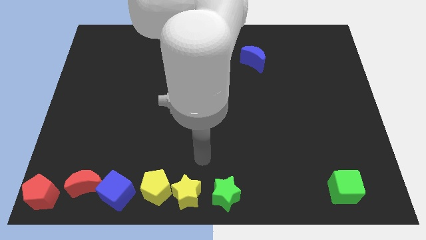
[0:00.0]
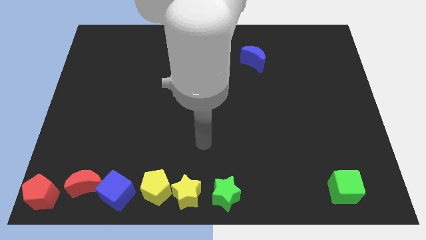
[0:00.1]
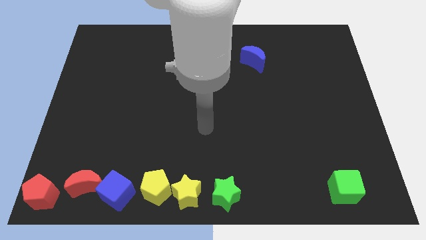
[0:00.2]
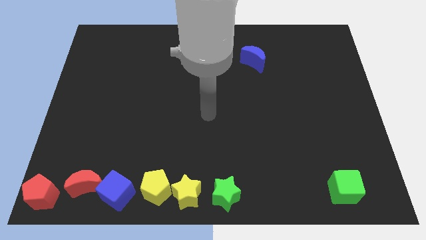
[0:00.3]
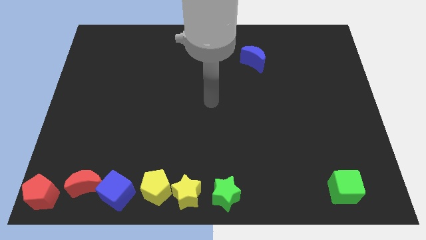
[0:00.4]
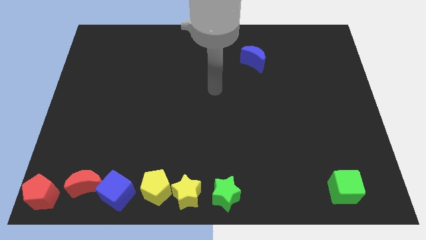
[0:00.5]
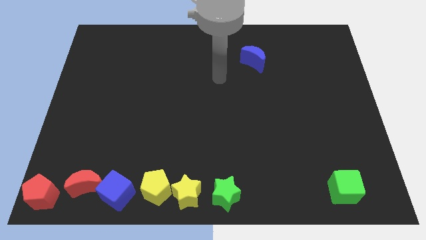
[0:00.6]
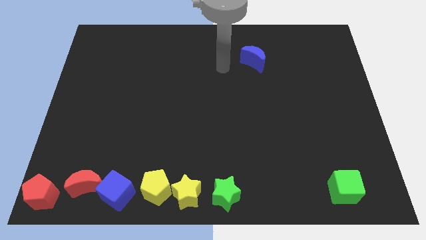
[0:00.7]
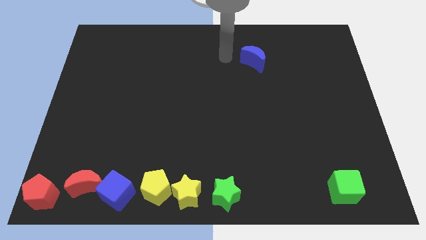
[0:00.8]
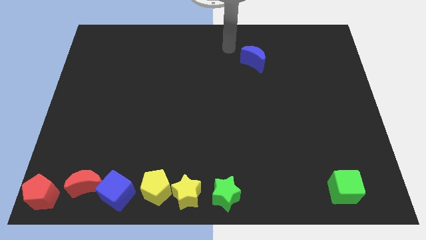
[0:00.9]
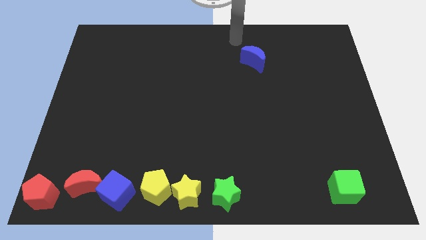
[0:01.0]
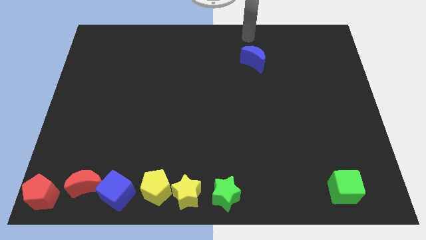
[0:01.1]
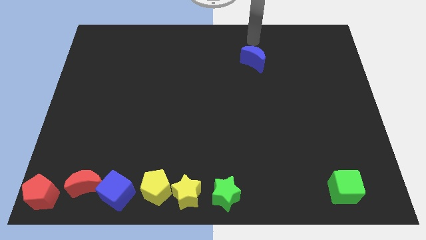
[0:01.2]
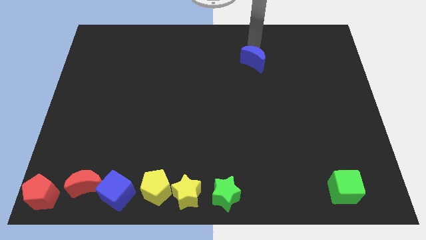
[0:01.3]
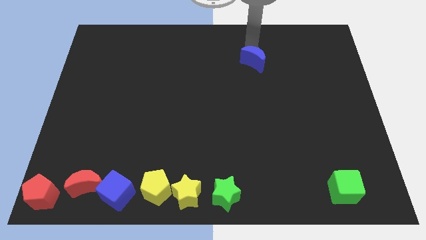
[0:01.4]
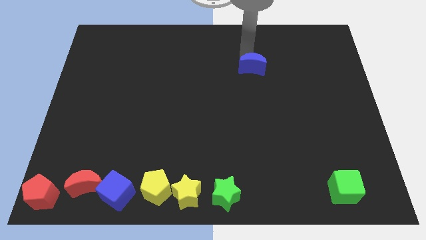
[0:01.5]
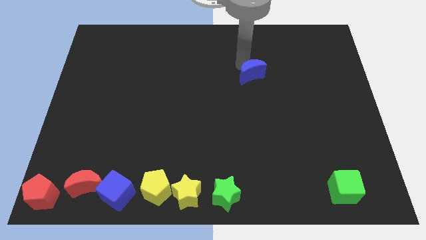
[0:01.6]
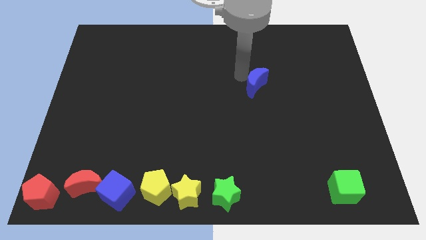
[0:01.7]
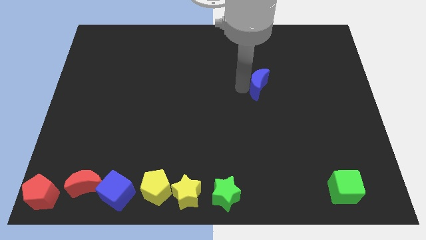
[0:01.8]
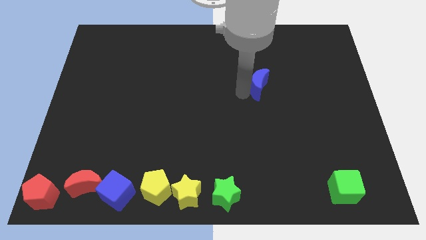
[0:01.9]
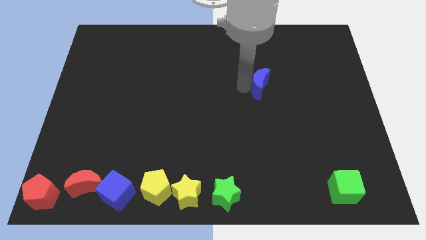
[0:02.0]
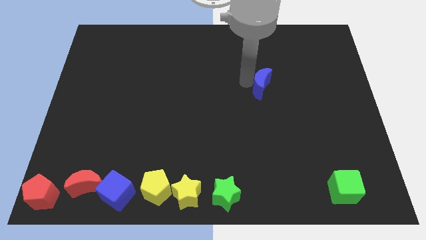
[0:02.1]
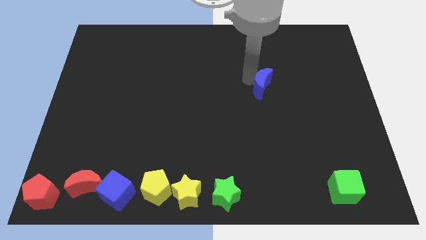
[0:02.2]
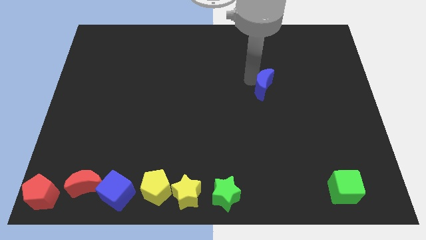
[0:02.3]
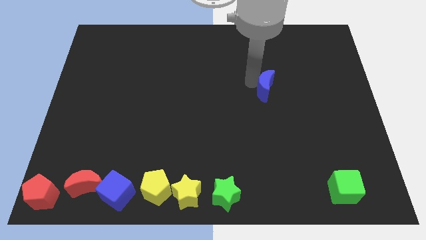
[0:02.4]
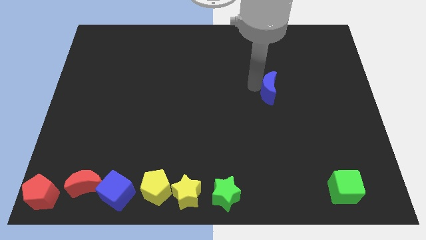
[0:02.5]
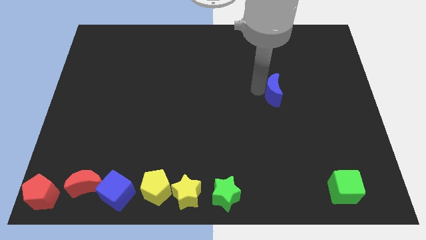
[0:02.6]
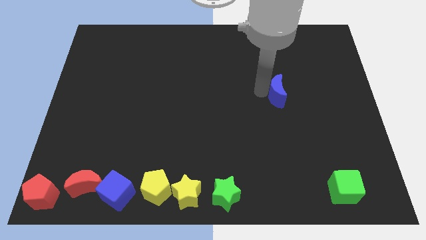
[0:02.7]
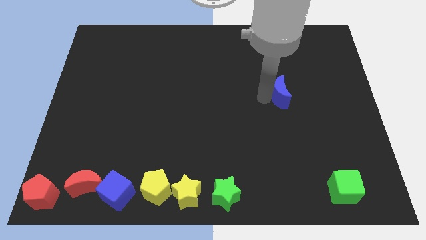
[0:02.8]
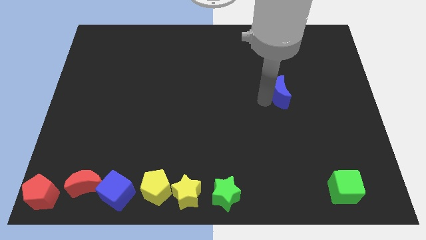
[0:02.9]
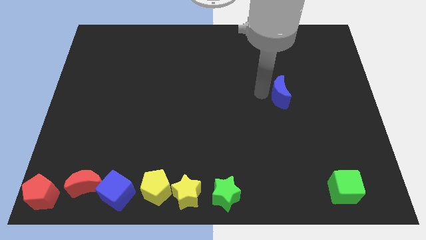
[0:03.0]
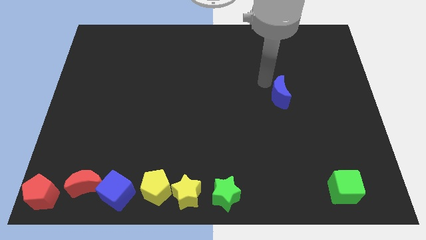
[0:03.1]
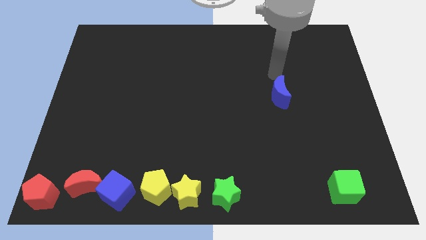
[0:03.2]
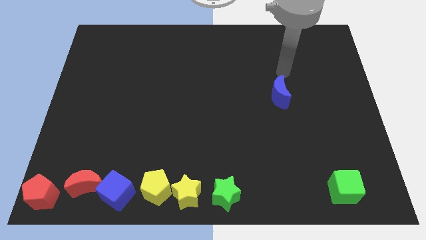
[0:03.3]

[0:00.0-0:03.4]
slide the blue moon towards center right

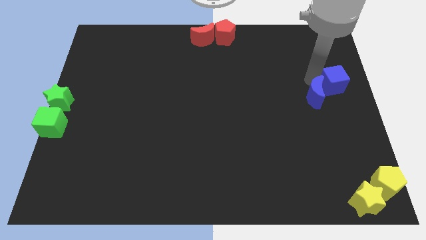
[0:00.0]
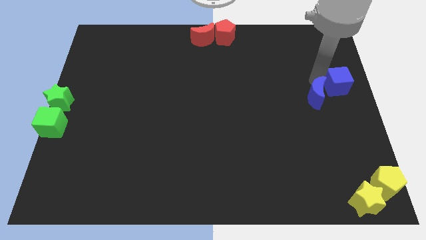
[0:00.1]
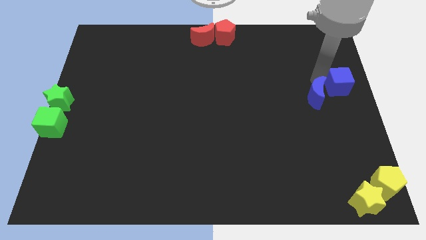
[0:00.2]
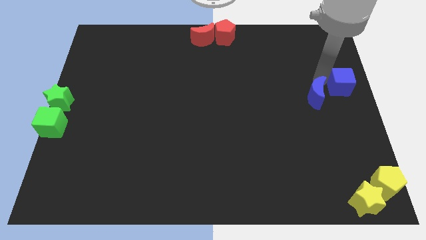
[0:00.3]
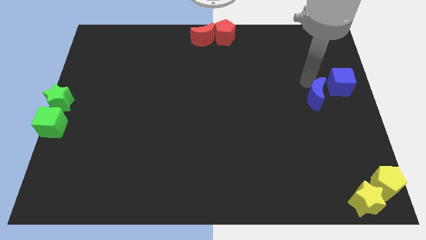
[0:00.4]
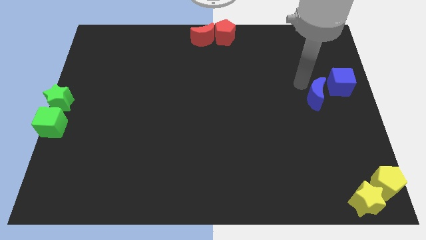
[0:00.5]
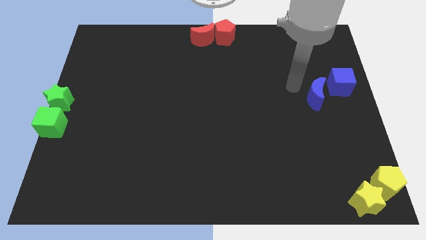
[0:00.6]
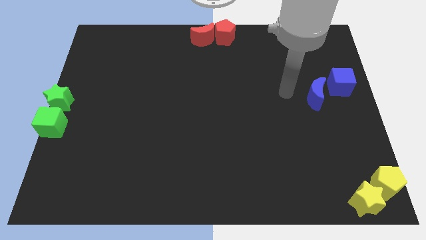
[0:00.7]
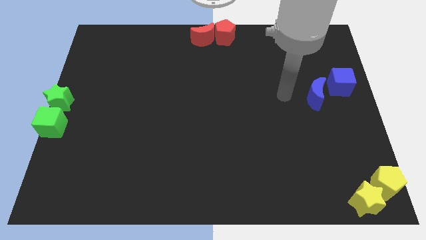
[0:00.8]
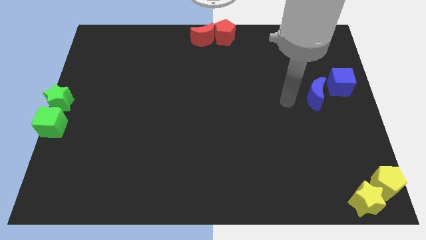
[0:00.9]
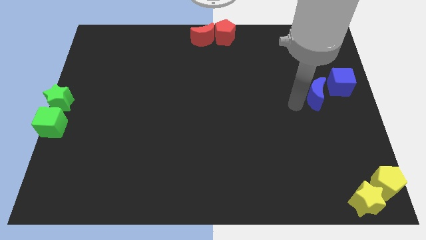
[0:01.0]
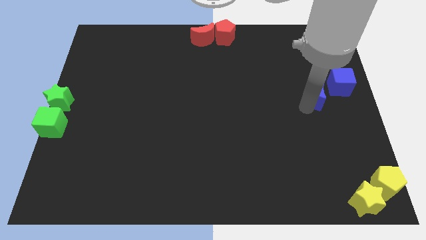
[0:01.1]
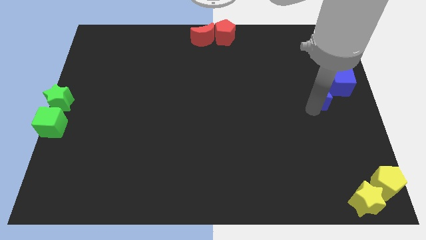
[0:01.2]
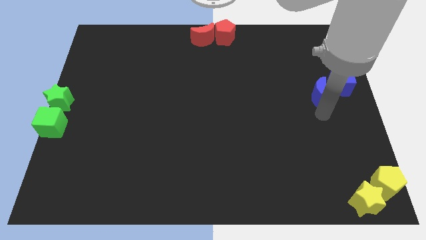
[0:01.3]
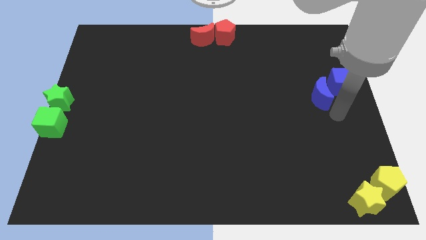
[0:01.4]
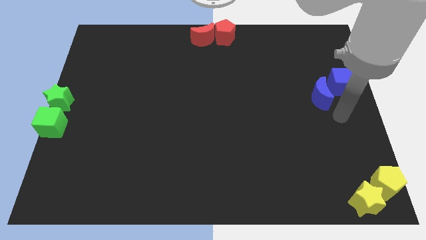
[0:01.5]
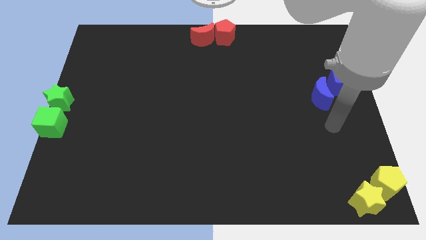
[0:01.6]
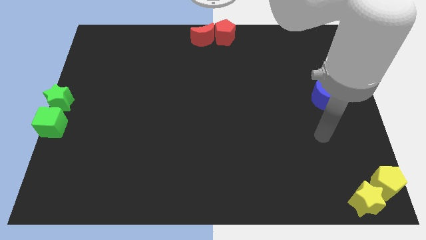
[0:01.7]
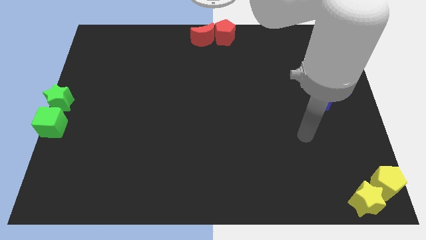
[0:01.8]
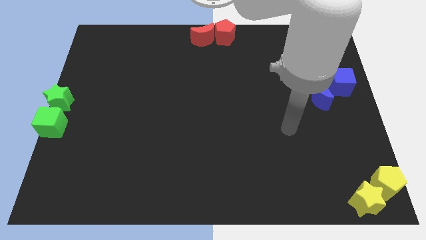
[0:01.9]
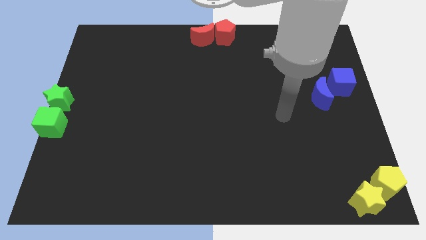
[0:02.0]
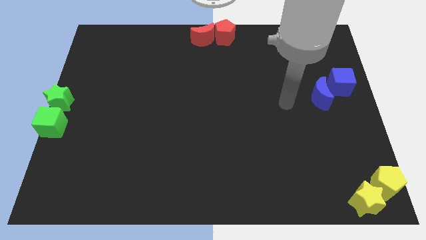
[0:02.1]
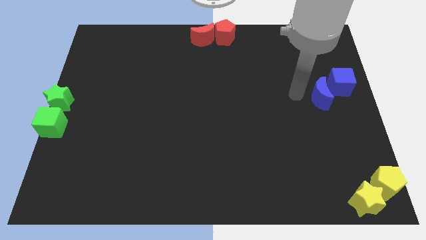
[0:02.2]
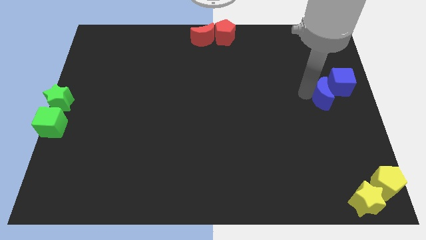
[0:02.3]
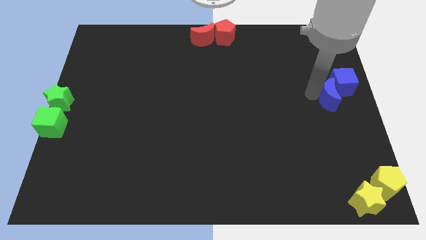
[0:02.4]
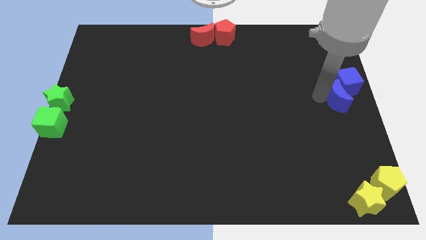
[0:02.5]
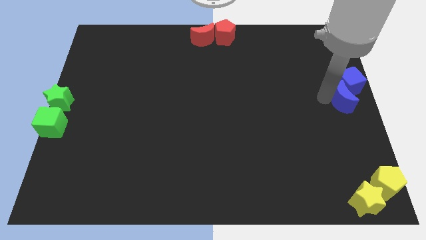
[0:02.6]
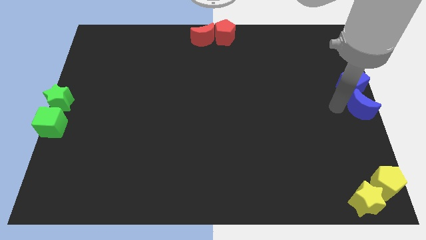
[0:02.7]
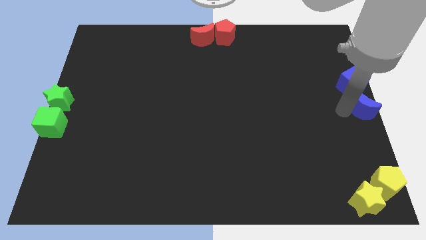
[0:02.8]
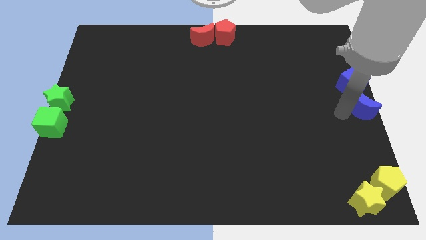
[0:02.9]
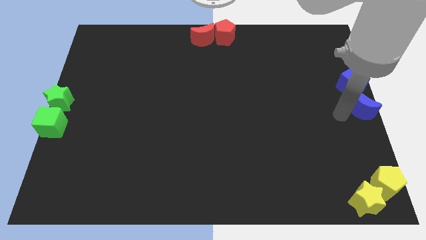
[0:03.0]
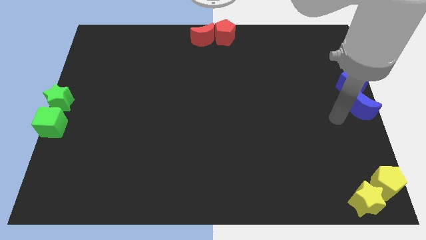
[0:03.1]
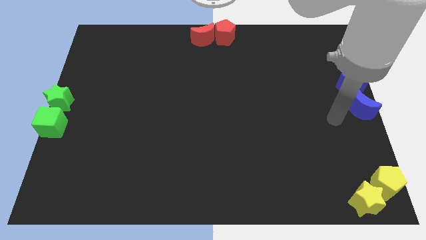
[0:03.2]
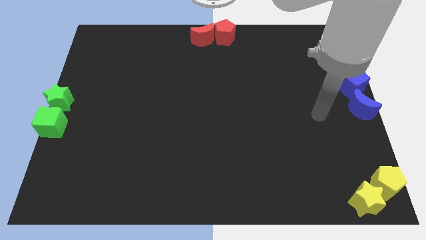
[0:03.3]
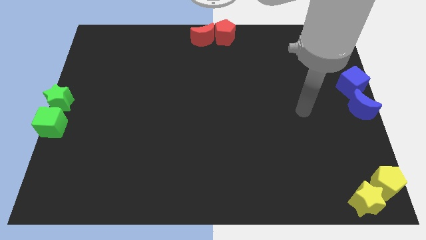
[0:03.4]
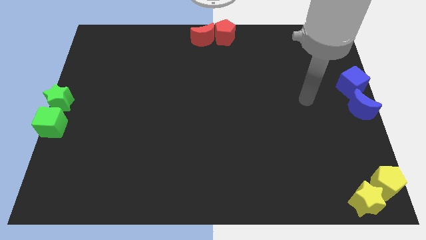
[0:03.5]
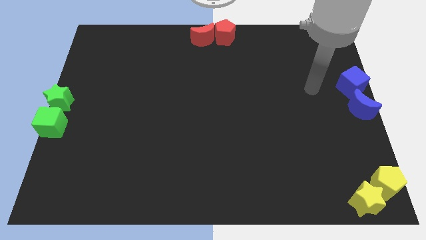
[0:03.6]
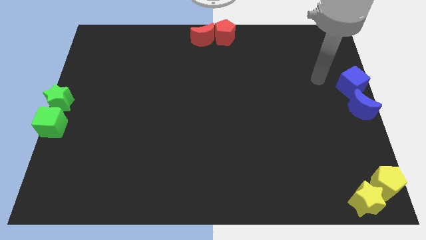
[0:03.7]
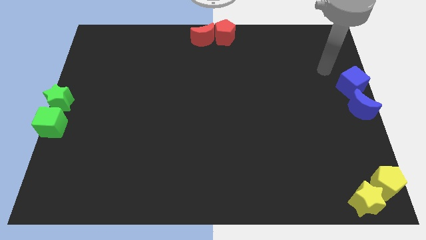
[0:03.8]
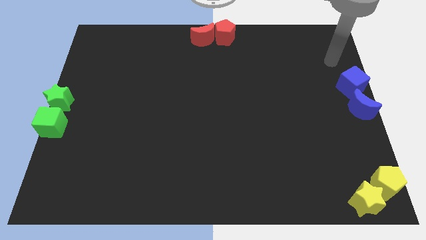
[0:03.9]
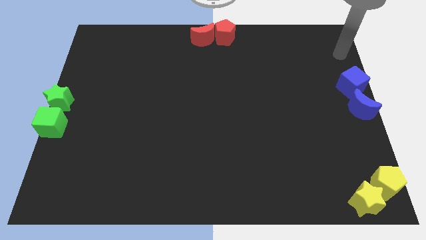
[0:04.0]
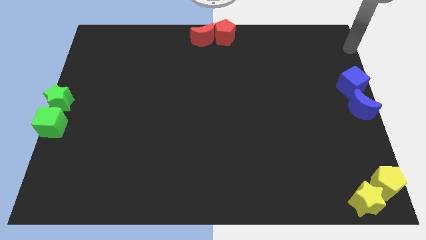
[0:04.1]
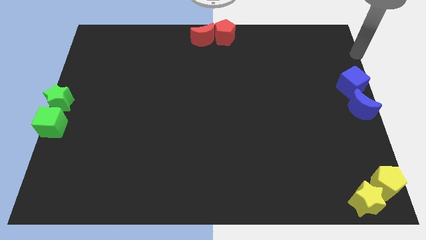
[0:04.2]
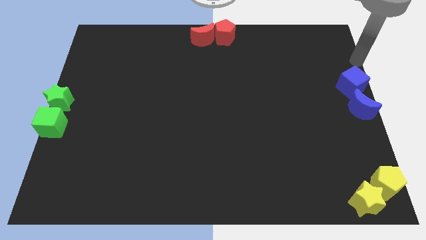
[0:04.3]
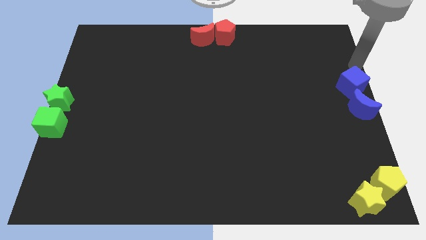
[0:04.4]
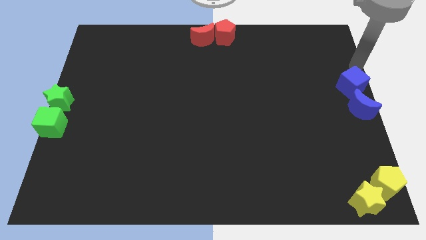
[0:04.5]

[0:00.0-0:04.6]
move away the blue crescent from the blue cube

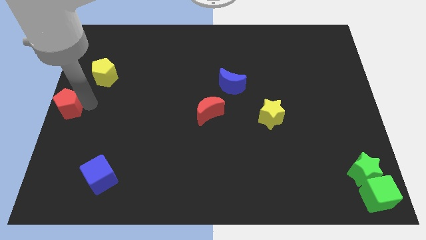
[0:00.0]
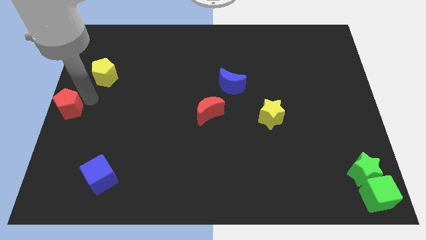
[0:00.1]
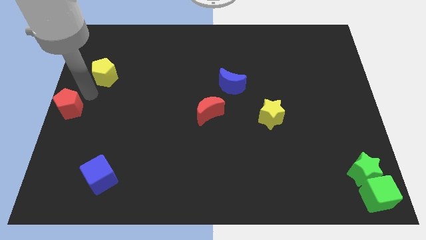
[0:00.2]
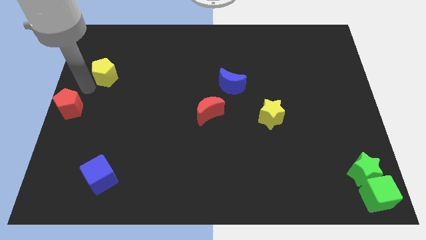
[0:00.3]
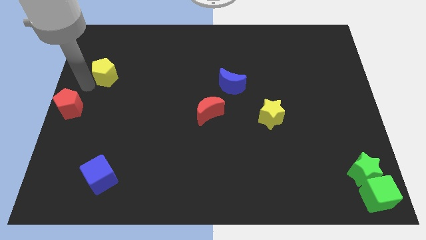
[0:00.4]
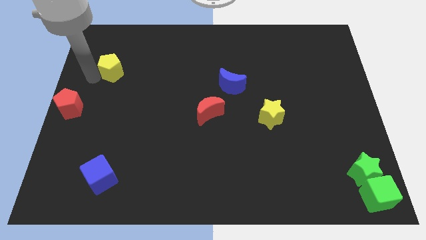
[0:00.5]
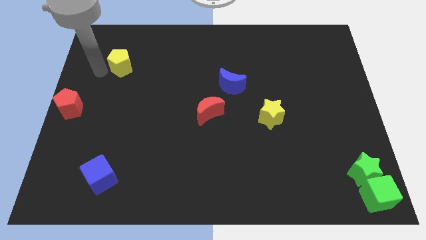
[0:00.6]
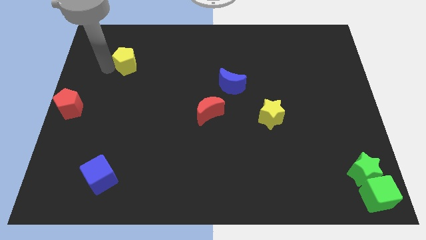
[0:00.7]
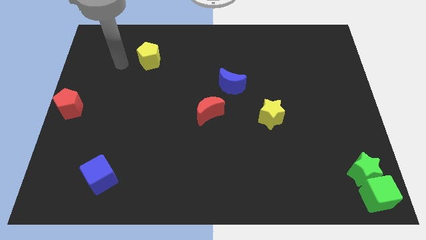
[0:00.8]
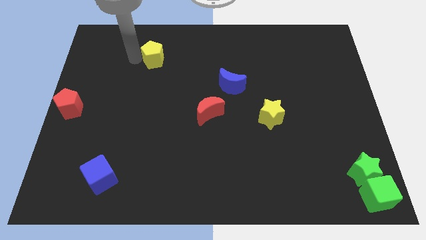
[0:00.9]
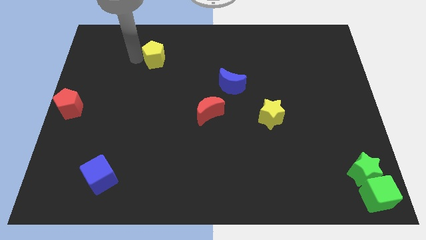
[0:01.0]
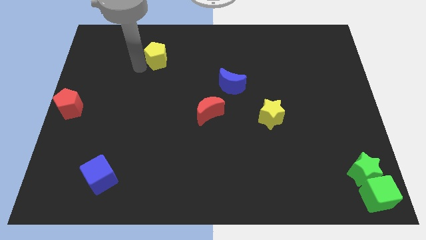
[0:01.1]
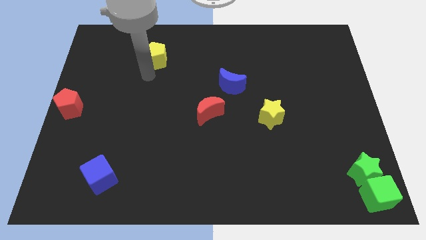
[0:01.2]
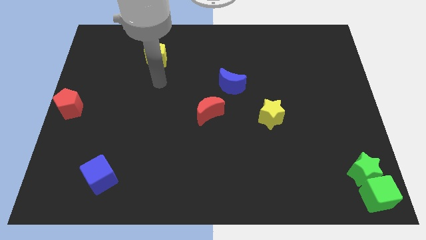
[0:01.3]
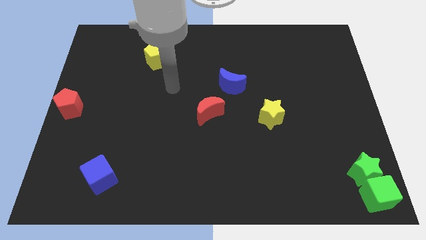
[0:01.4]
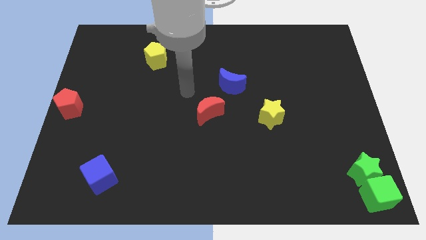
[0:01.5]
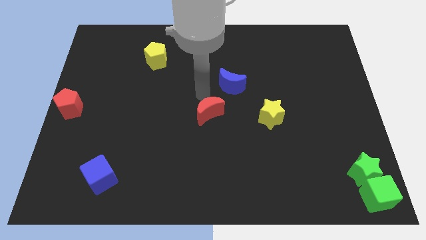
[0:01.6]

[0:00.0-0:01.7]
push the yellow pentagon diagonally to the top left of the red moon
